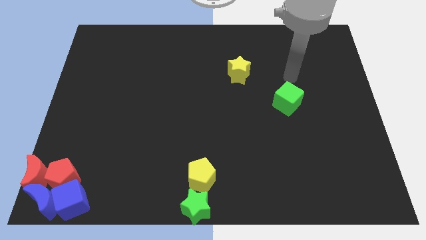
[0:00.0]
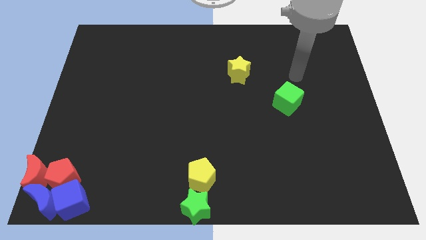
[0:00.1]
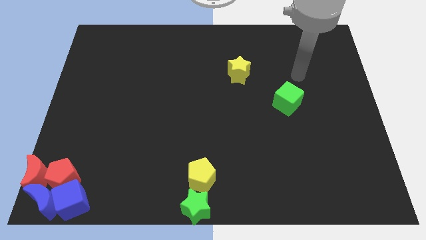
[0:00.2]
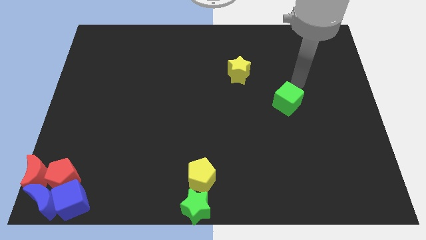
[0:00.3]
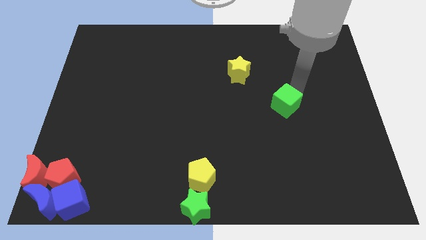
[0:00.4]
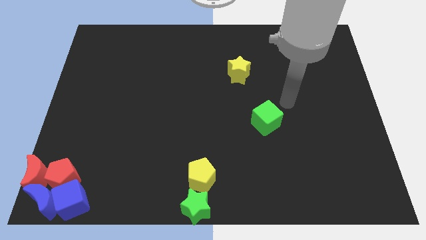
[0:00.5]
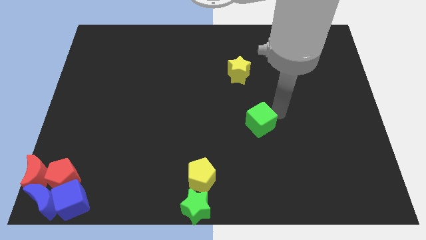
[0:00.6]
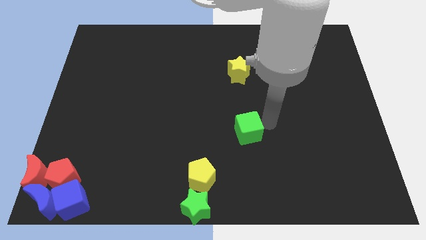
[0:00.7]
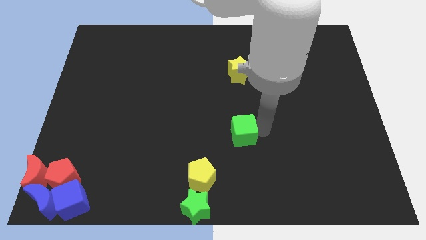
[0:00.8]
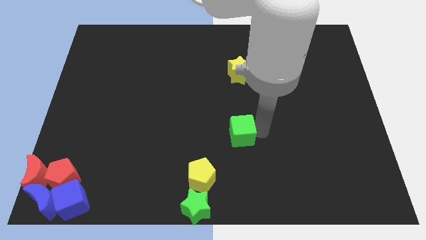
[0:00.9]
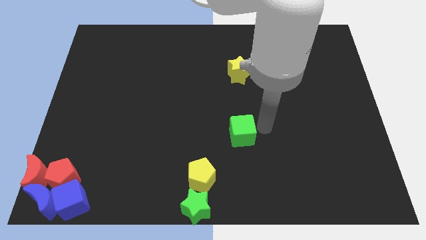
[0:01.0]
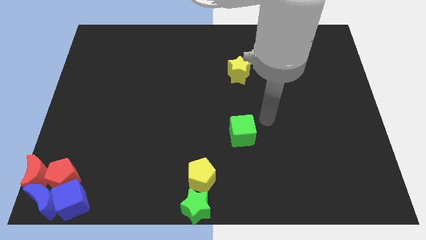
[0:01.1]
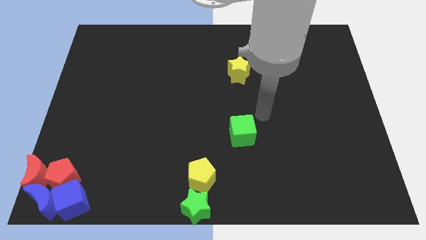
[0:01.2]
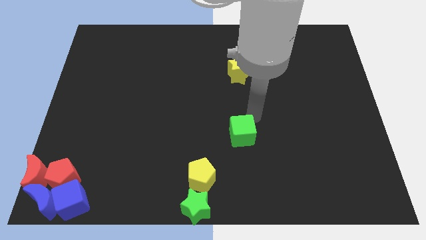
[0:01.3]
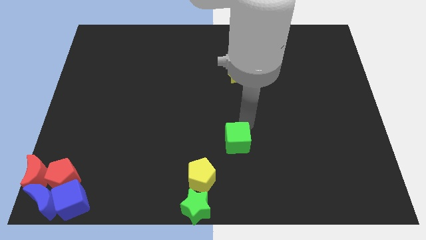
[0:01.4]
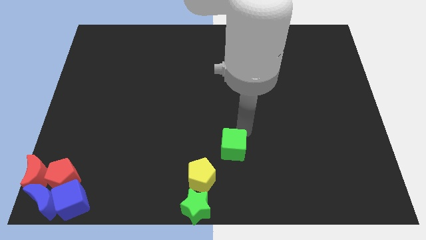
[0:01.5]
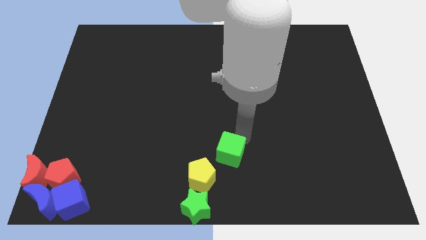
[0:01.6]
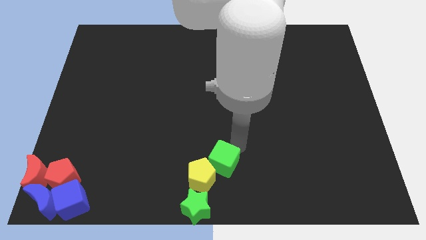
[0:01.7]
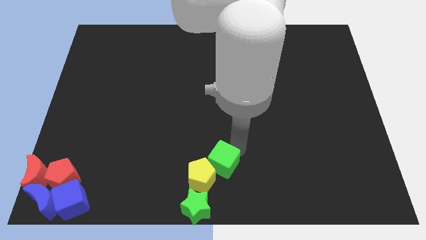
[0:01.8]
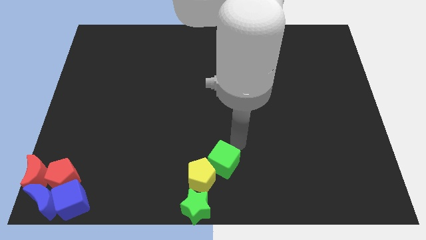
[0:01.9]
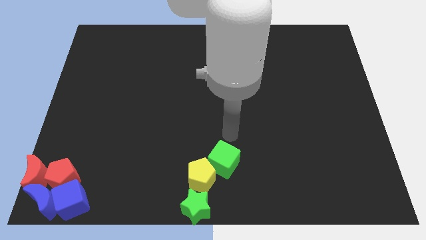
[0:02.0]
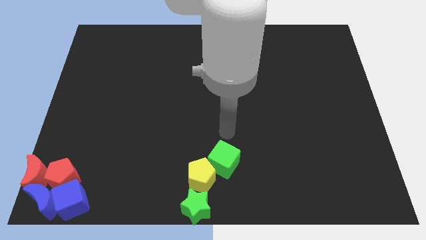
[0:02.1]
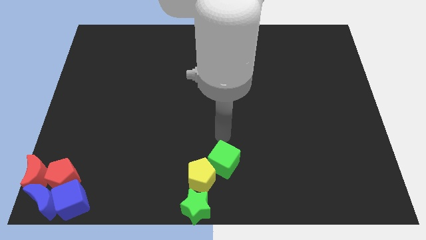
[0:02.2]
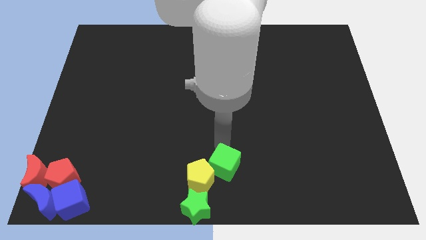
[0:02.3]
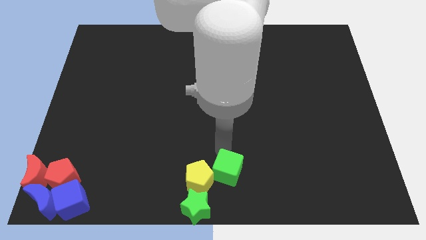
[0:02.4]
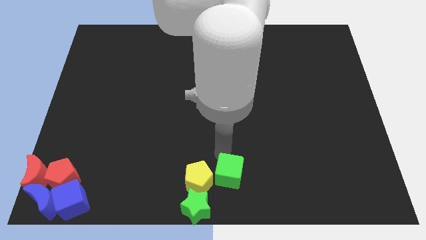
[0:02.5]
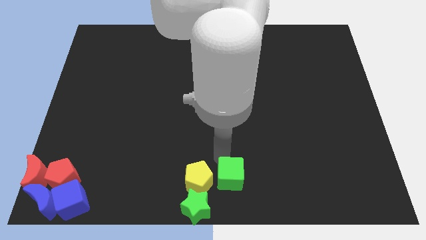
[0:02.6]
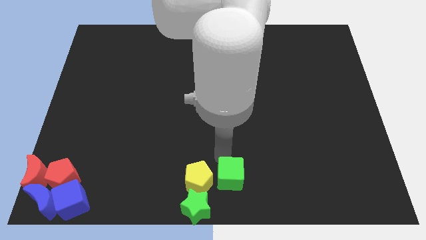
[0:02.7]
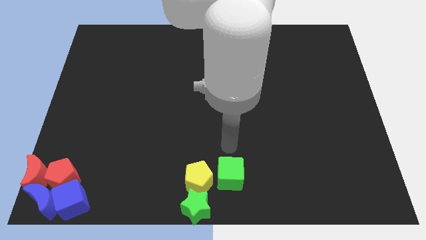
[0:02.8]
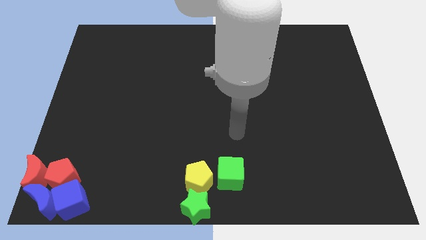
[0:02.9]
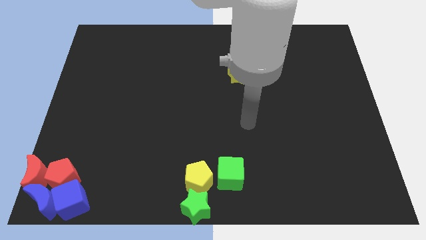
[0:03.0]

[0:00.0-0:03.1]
push green cube to the right of yellow pentagon

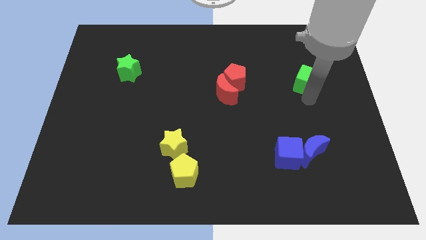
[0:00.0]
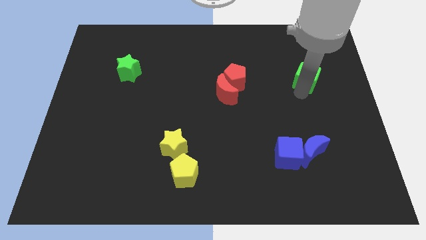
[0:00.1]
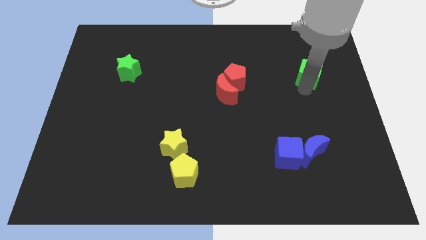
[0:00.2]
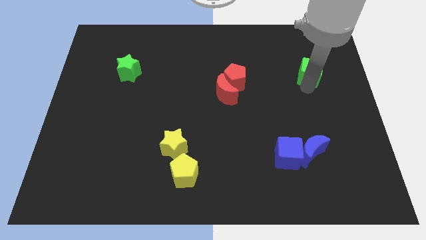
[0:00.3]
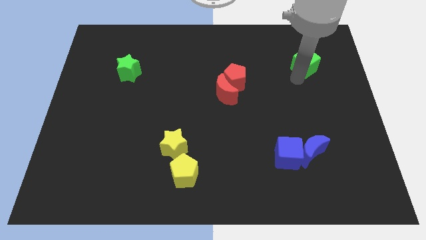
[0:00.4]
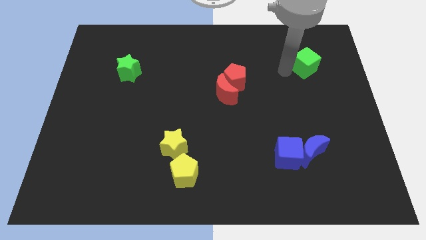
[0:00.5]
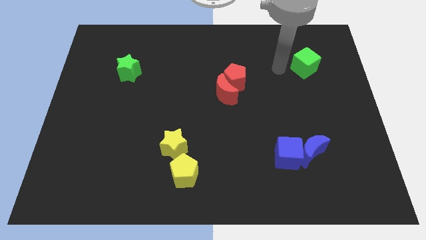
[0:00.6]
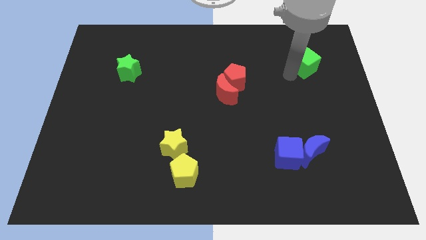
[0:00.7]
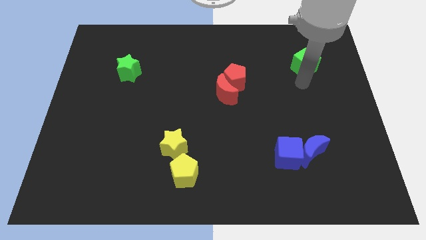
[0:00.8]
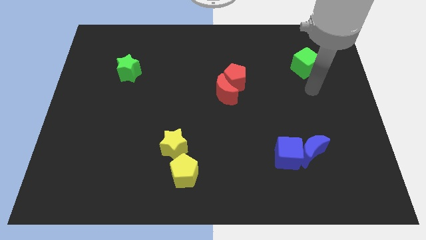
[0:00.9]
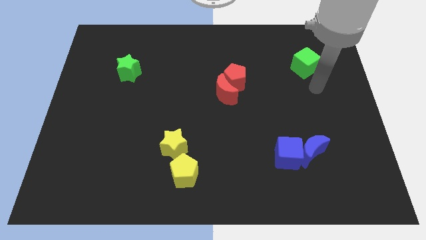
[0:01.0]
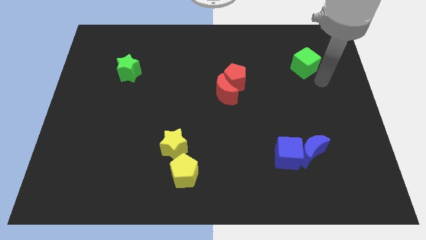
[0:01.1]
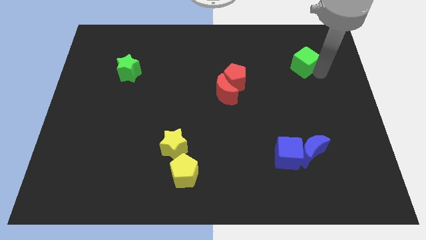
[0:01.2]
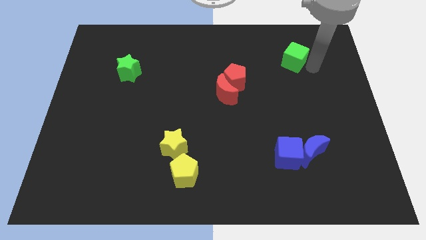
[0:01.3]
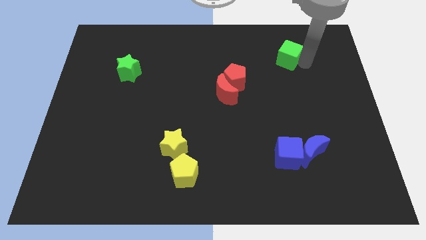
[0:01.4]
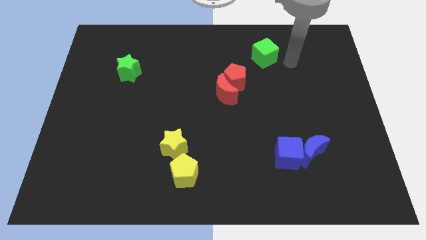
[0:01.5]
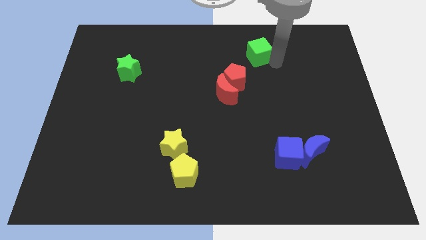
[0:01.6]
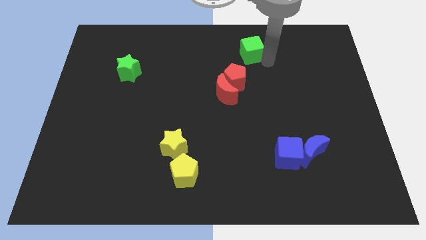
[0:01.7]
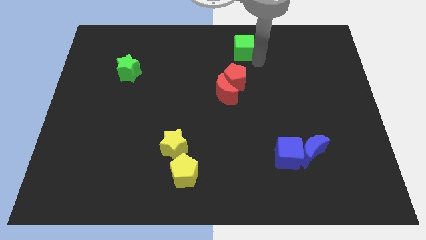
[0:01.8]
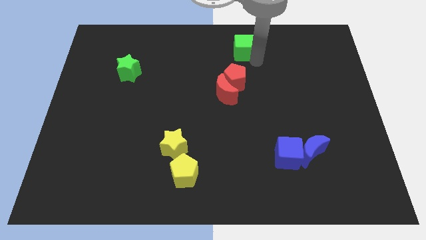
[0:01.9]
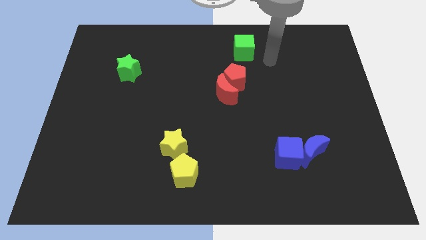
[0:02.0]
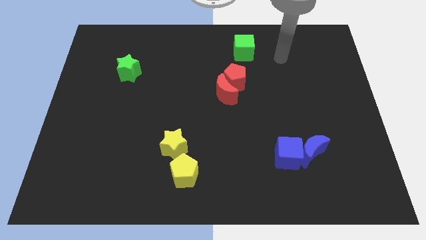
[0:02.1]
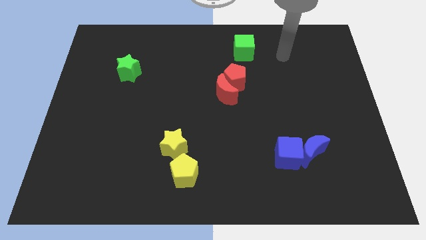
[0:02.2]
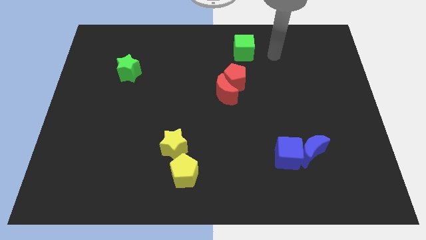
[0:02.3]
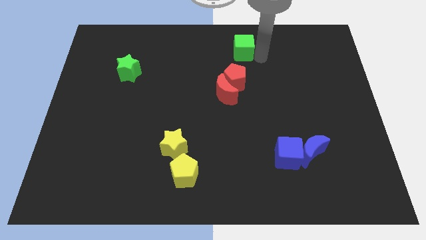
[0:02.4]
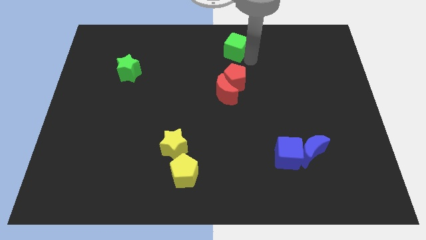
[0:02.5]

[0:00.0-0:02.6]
place the green cube at the top of the red pentagon

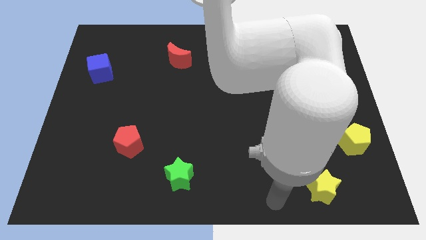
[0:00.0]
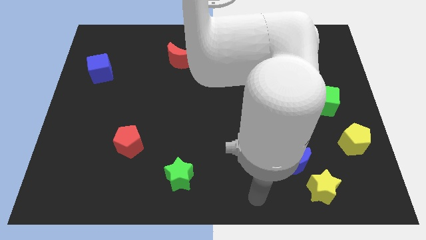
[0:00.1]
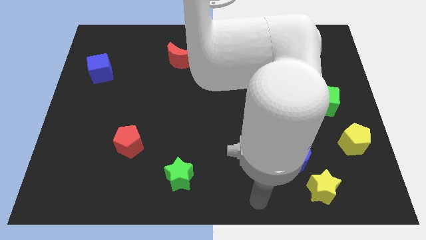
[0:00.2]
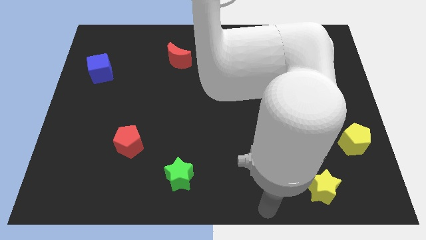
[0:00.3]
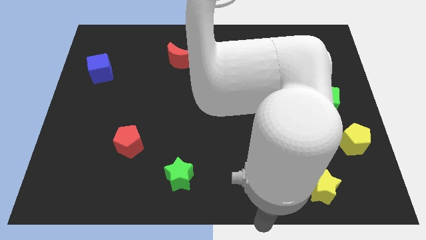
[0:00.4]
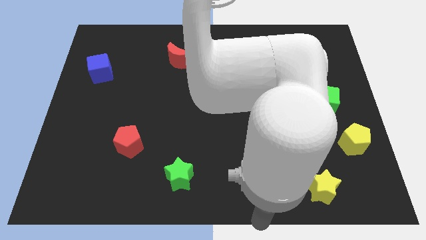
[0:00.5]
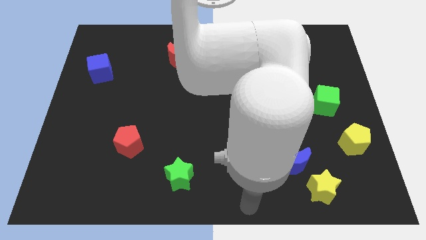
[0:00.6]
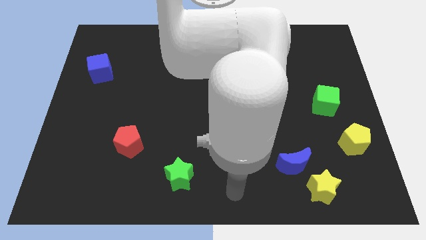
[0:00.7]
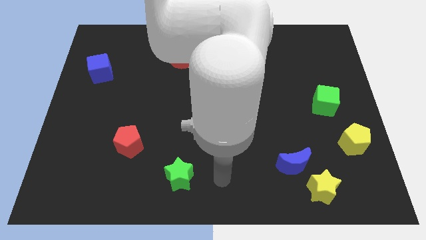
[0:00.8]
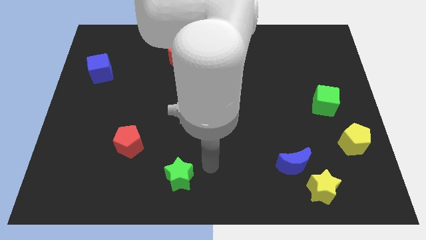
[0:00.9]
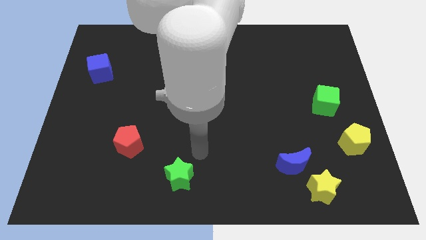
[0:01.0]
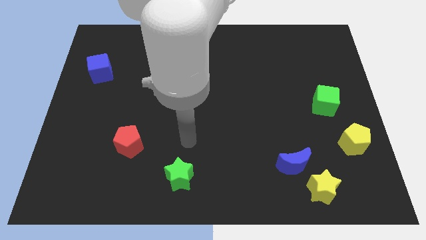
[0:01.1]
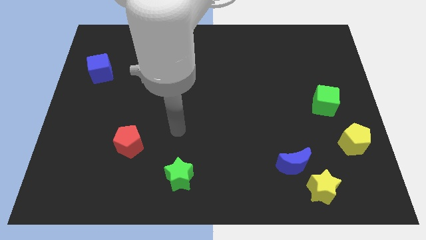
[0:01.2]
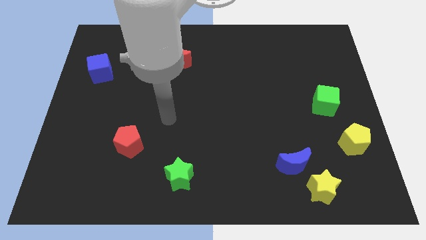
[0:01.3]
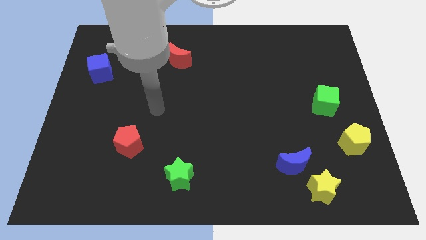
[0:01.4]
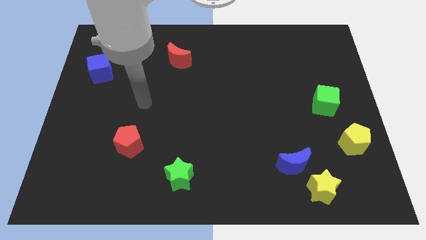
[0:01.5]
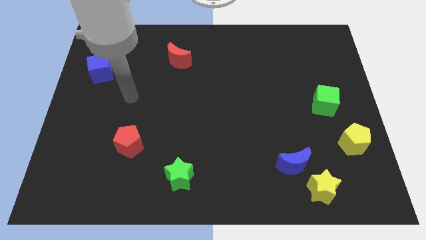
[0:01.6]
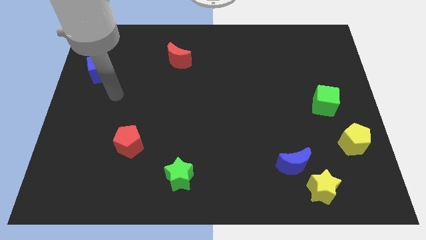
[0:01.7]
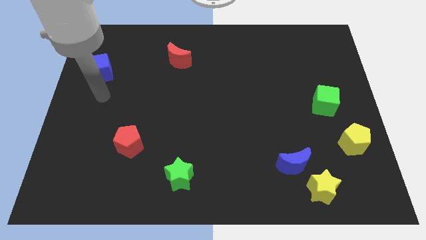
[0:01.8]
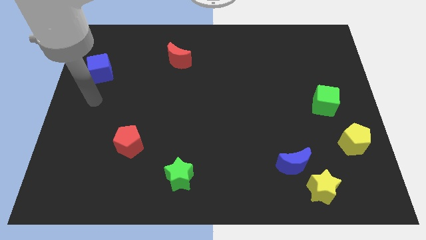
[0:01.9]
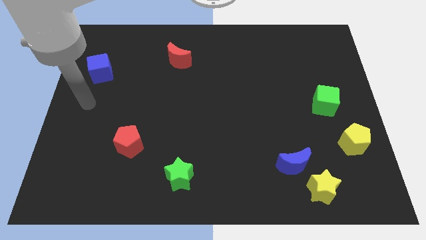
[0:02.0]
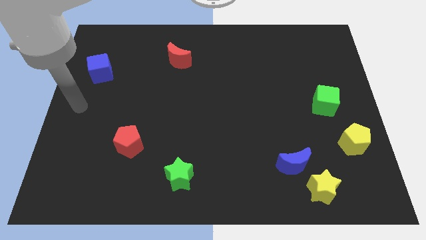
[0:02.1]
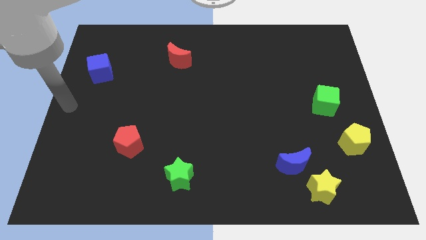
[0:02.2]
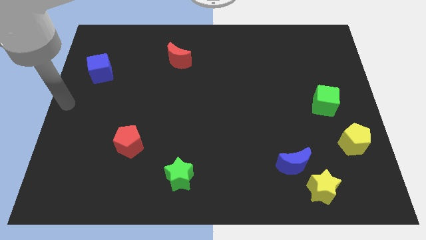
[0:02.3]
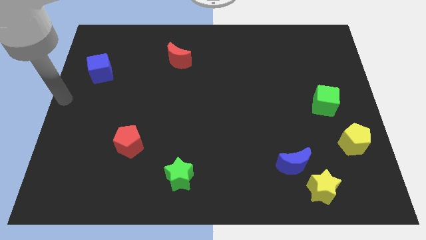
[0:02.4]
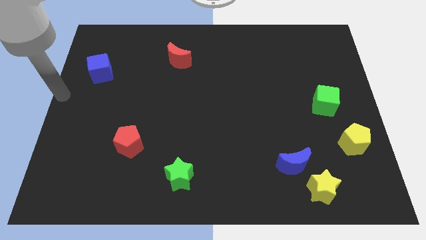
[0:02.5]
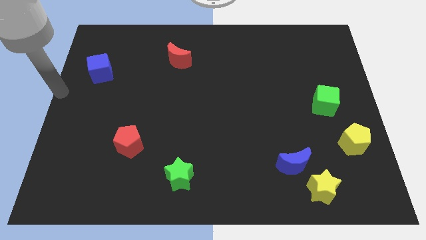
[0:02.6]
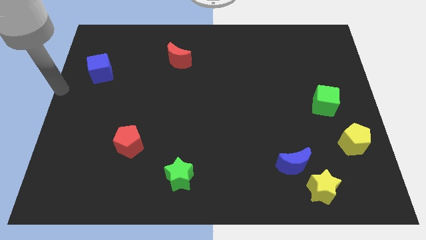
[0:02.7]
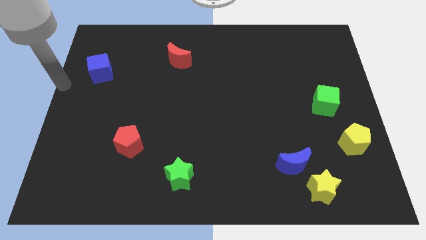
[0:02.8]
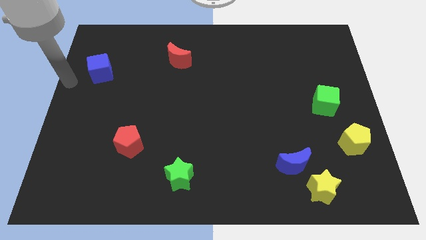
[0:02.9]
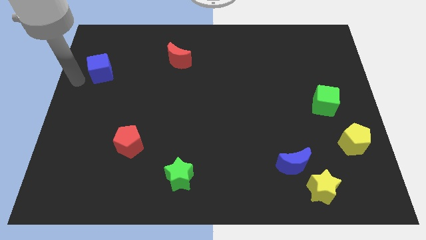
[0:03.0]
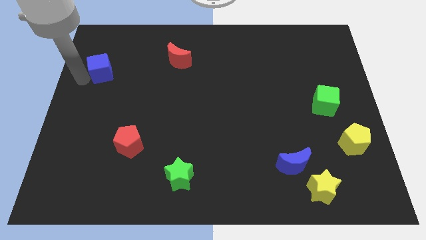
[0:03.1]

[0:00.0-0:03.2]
move the arm close to the blue cube
